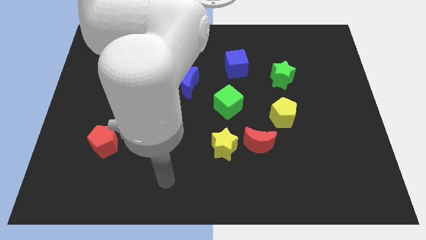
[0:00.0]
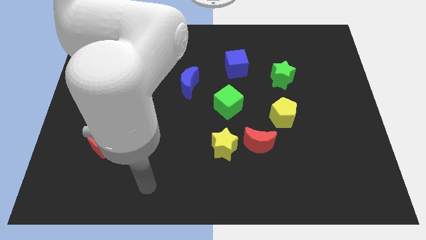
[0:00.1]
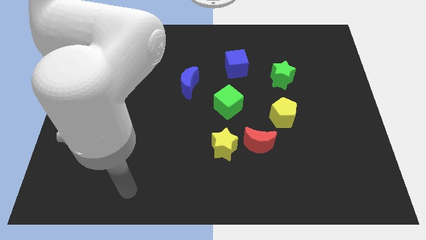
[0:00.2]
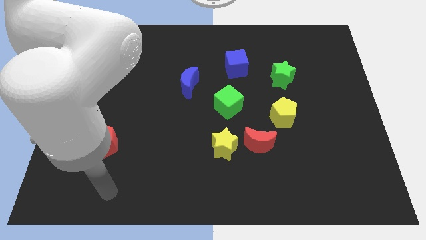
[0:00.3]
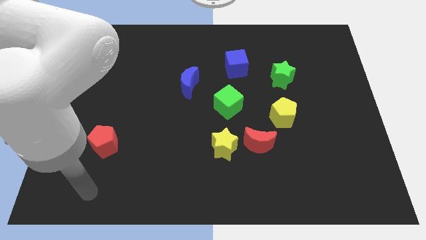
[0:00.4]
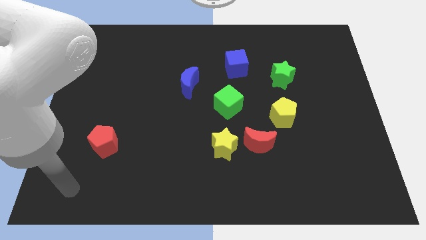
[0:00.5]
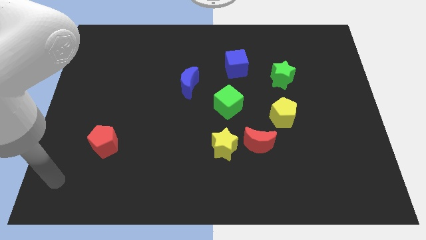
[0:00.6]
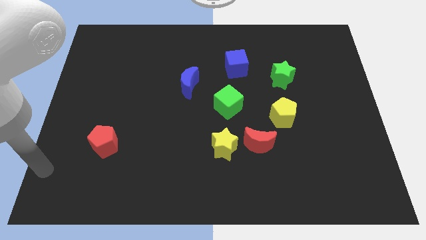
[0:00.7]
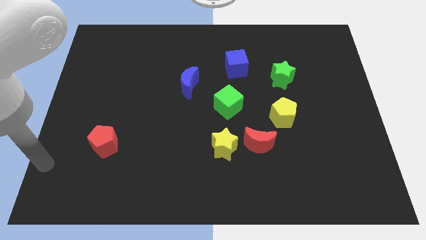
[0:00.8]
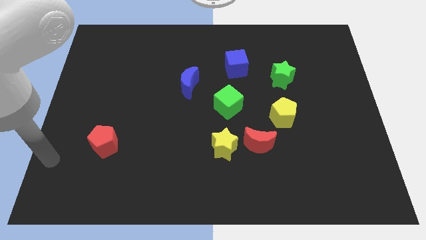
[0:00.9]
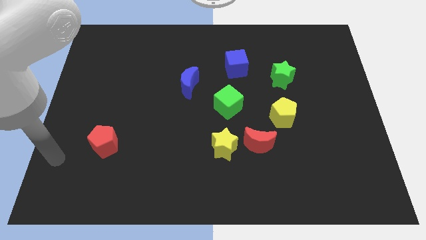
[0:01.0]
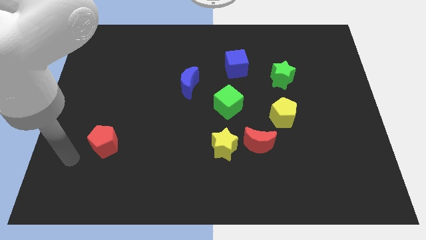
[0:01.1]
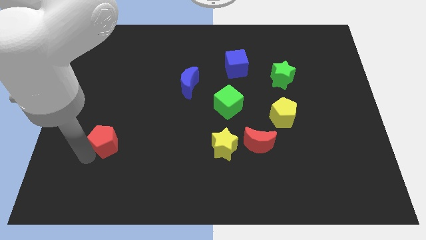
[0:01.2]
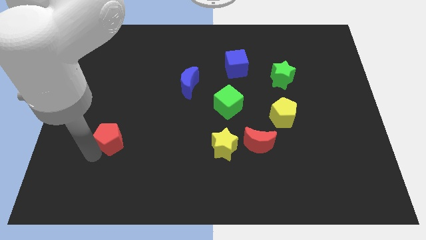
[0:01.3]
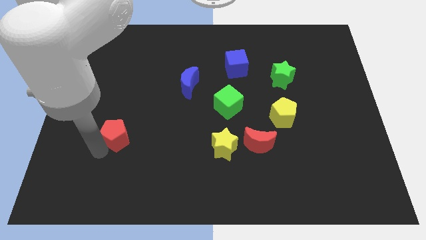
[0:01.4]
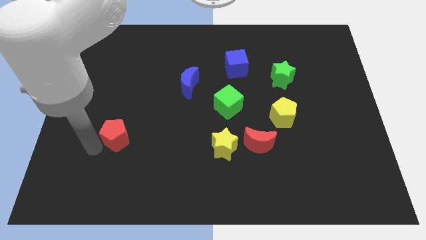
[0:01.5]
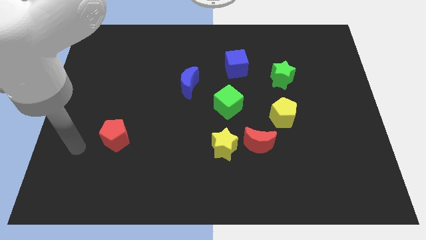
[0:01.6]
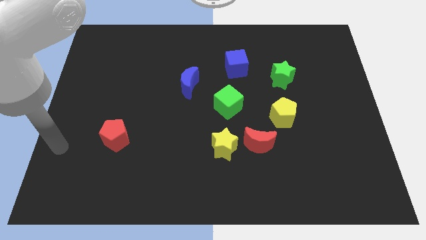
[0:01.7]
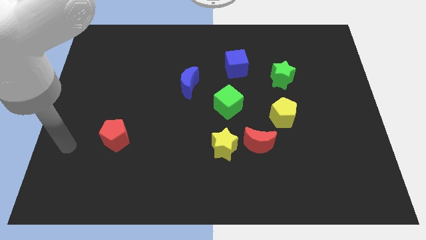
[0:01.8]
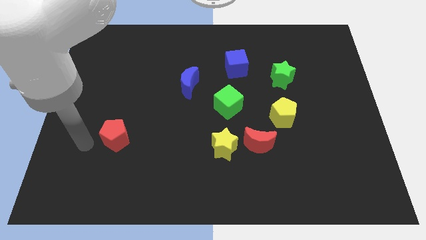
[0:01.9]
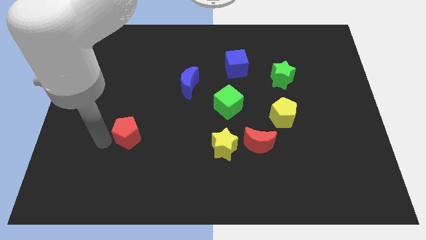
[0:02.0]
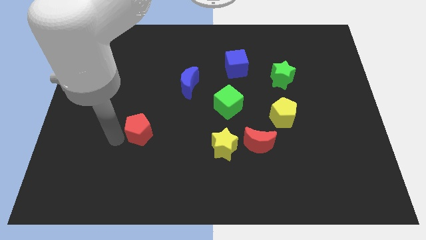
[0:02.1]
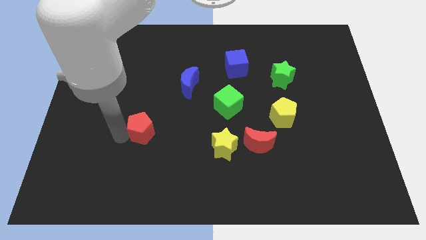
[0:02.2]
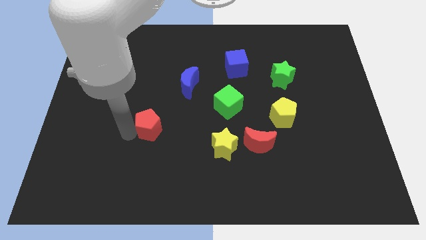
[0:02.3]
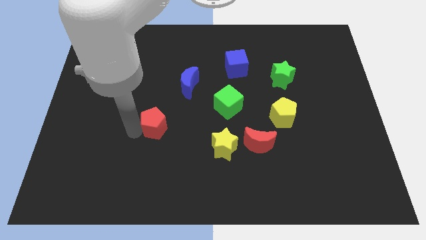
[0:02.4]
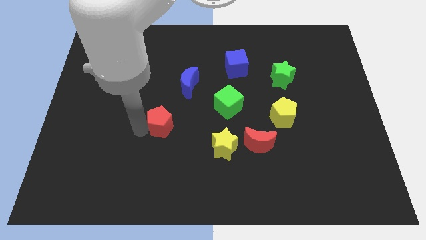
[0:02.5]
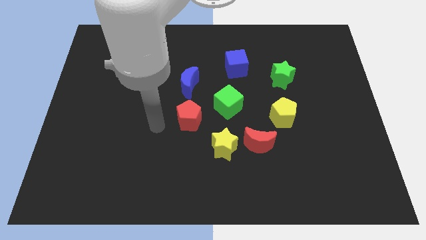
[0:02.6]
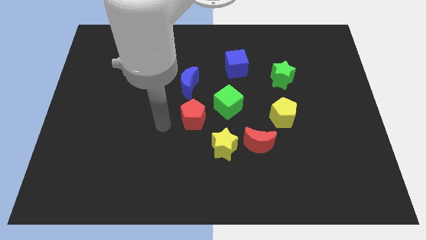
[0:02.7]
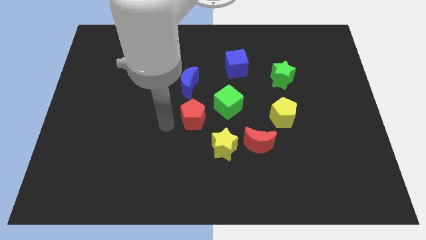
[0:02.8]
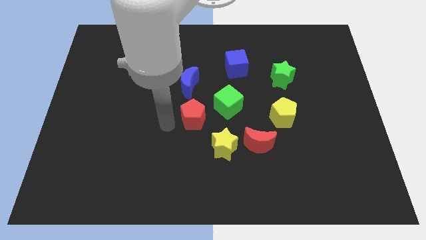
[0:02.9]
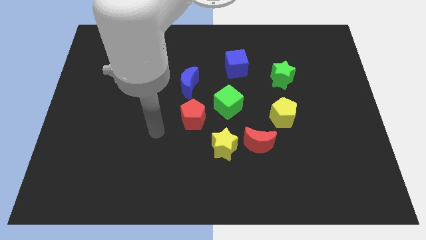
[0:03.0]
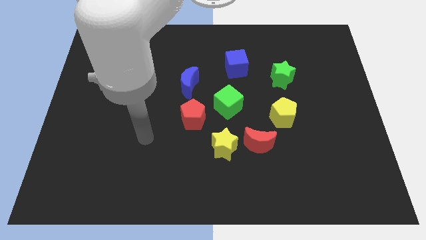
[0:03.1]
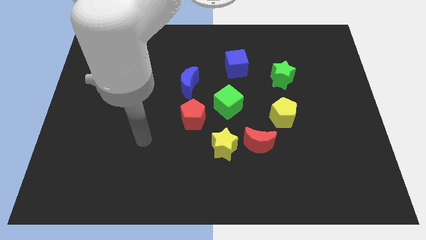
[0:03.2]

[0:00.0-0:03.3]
move the red pentagon to the left side of the green cube

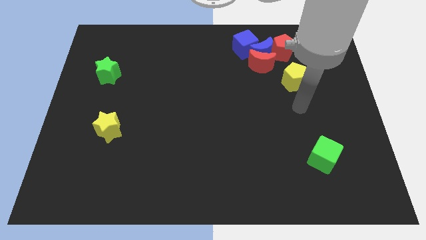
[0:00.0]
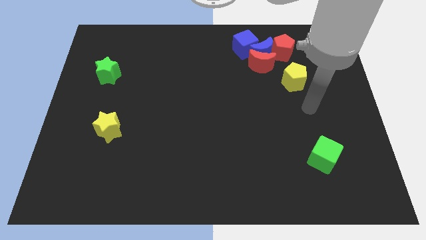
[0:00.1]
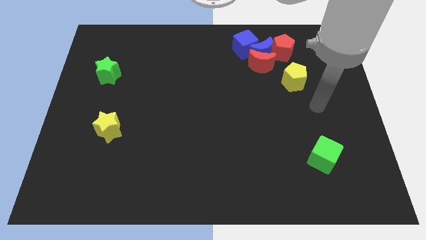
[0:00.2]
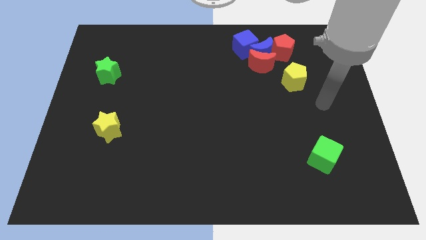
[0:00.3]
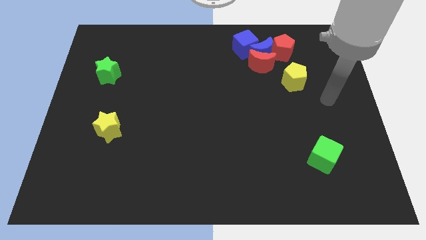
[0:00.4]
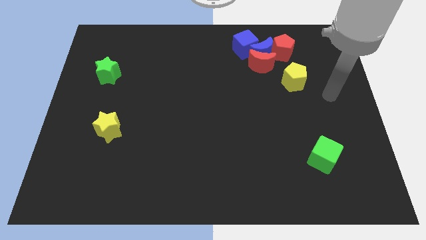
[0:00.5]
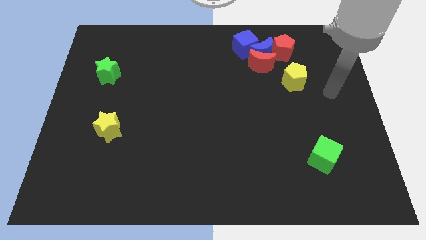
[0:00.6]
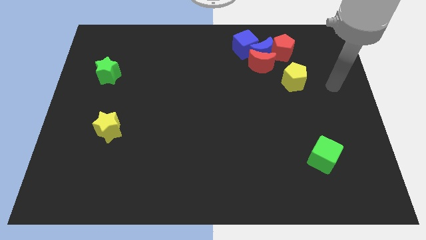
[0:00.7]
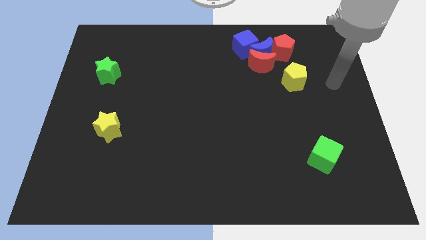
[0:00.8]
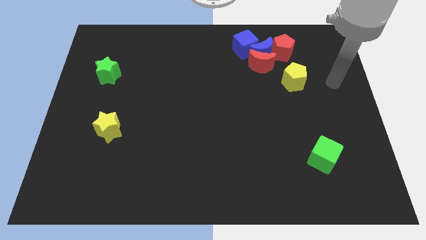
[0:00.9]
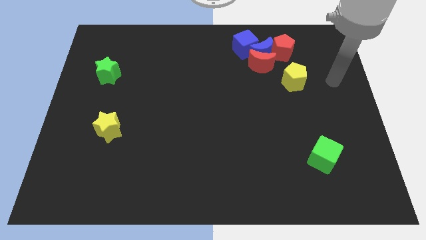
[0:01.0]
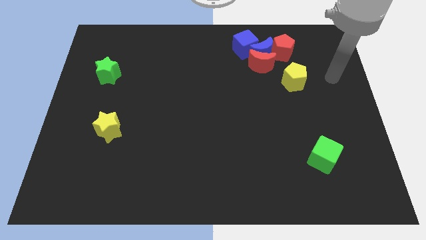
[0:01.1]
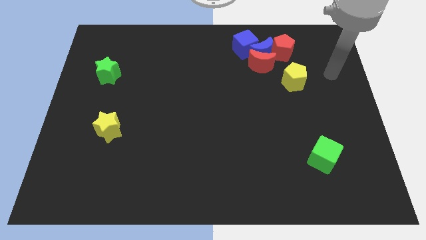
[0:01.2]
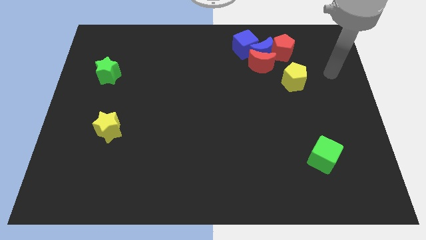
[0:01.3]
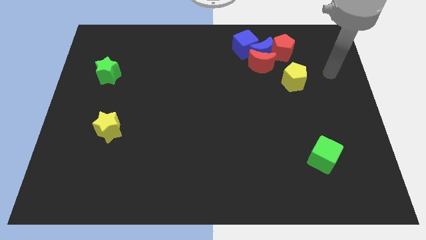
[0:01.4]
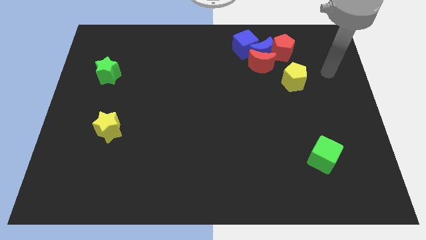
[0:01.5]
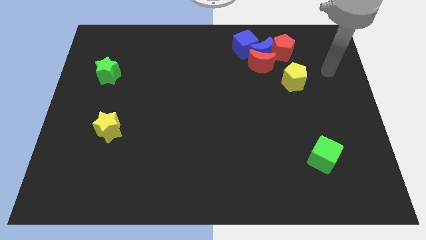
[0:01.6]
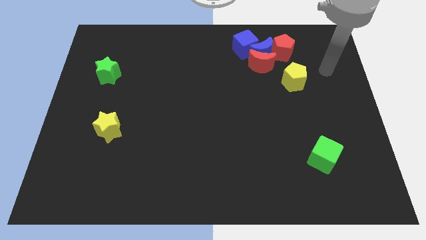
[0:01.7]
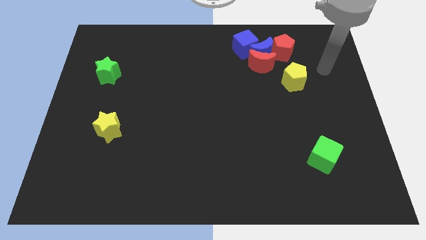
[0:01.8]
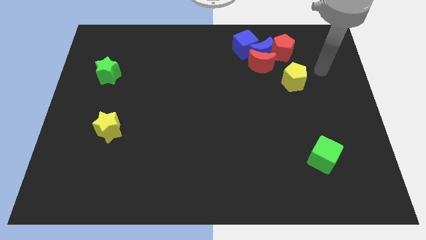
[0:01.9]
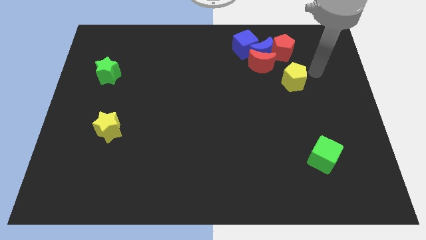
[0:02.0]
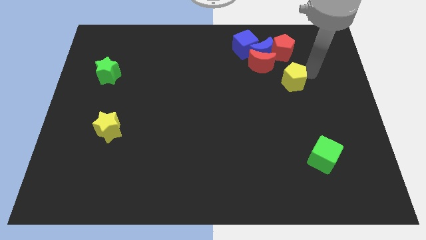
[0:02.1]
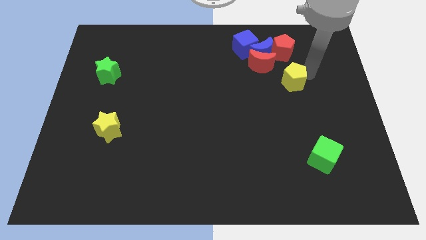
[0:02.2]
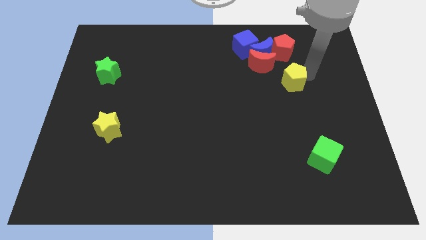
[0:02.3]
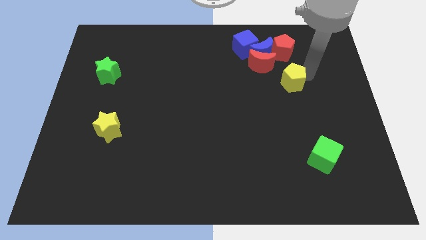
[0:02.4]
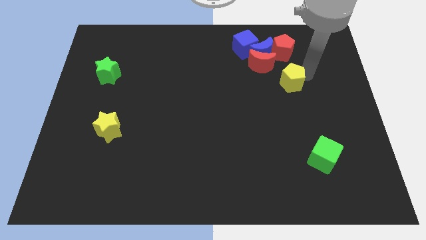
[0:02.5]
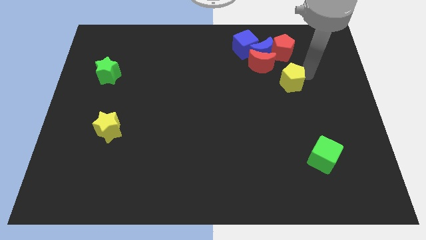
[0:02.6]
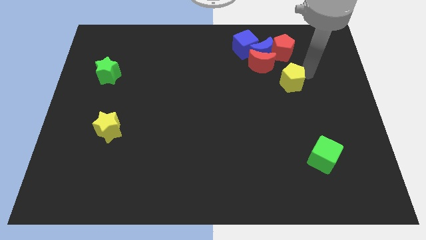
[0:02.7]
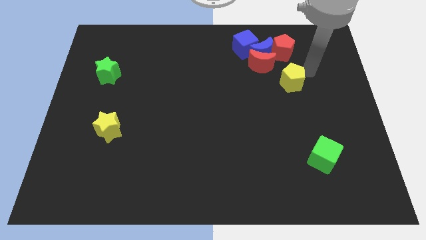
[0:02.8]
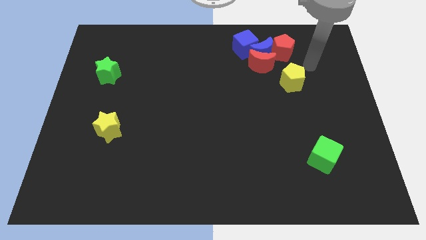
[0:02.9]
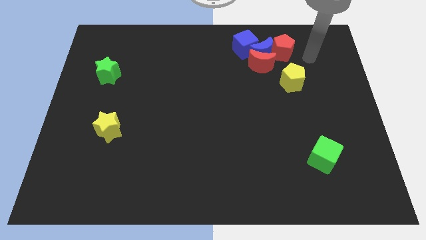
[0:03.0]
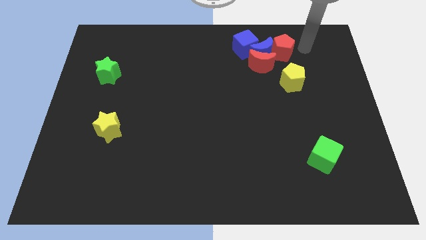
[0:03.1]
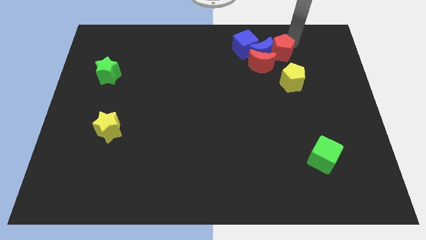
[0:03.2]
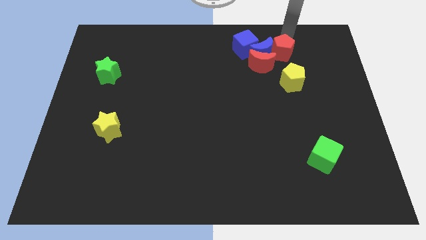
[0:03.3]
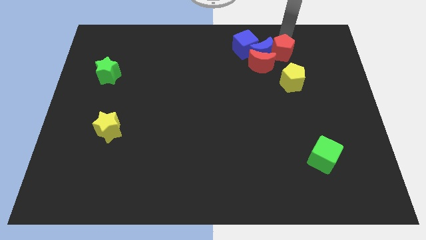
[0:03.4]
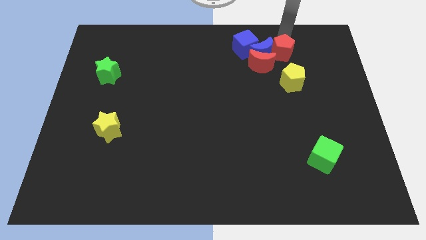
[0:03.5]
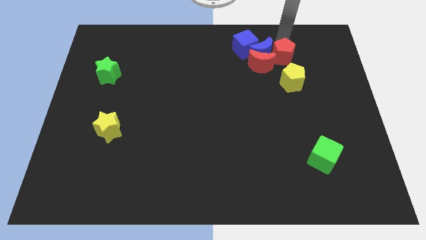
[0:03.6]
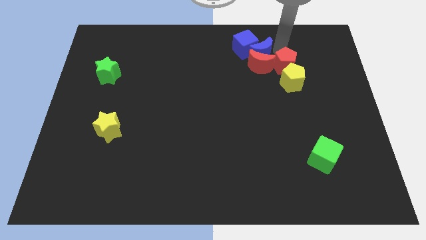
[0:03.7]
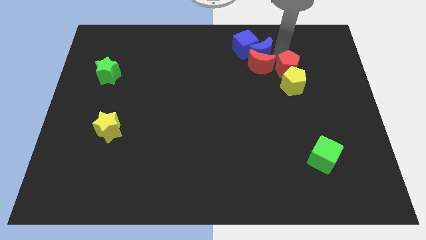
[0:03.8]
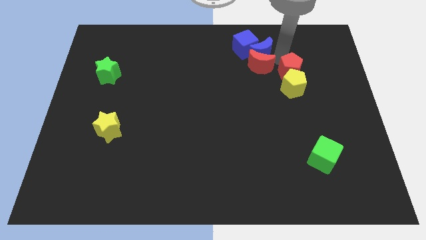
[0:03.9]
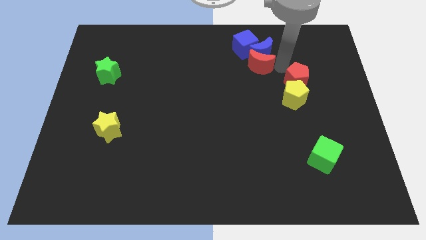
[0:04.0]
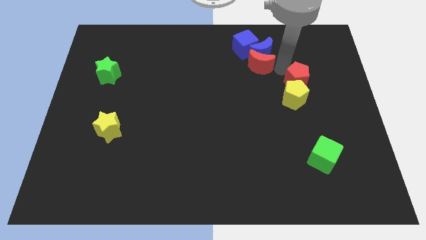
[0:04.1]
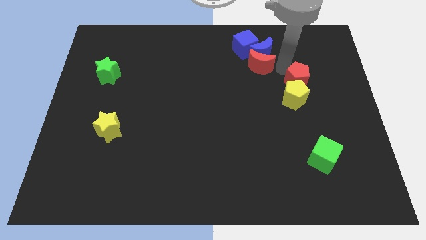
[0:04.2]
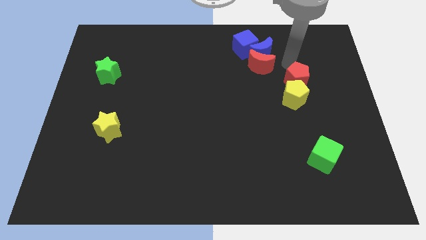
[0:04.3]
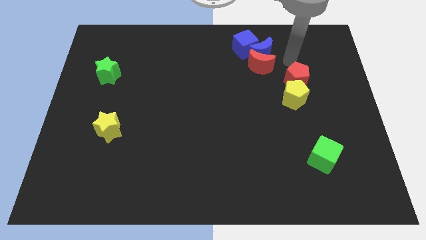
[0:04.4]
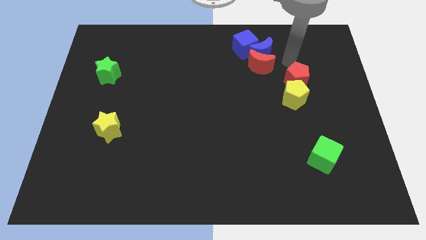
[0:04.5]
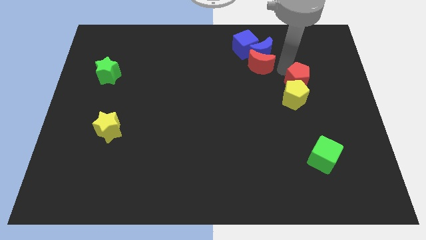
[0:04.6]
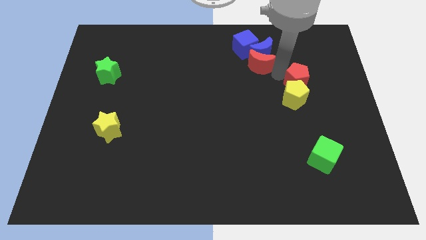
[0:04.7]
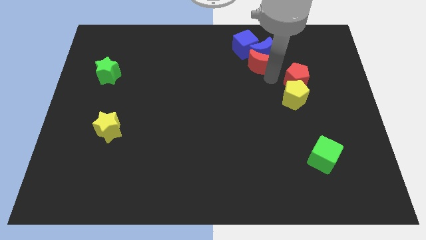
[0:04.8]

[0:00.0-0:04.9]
place the red pentagon and yellow penatgon together

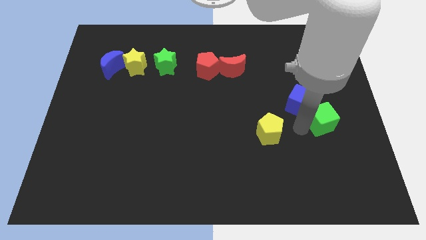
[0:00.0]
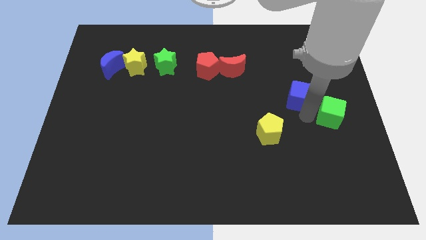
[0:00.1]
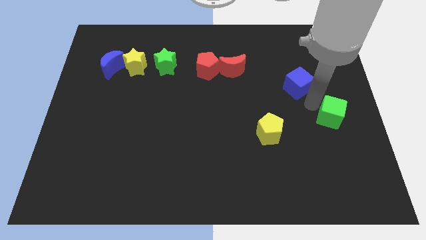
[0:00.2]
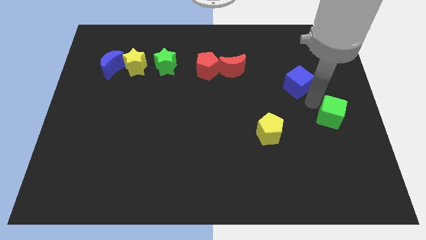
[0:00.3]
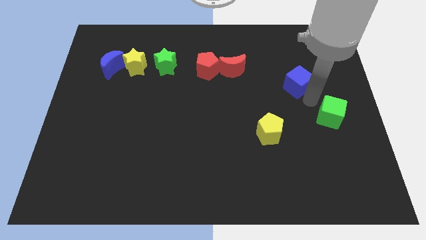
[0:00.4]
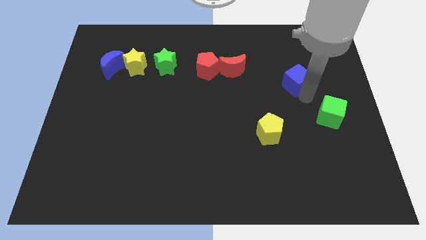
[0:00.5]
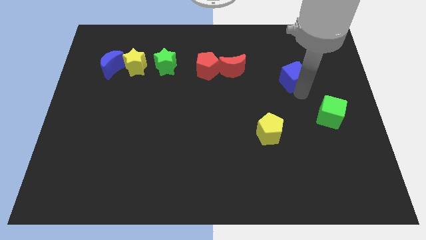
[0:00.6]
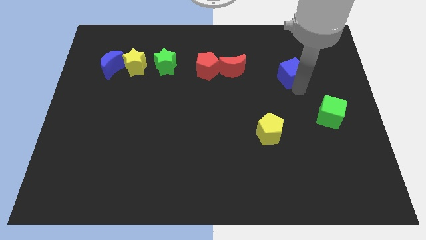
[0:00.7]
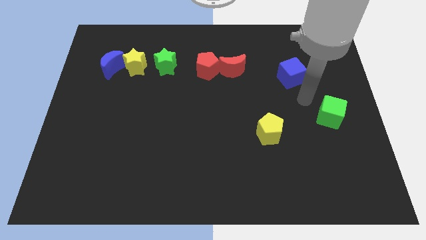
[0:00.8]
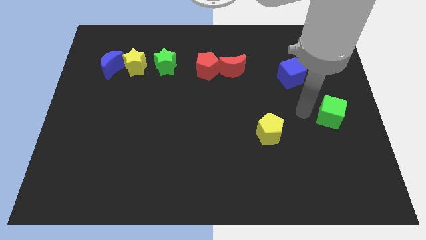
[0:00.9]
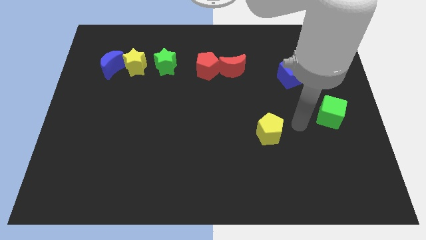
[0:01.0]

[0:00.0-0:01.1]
slide the blue cube away from the green cube
